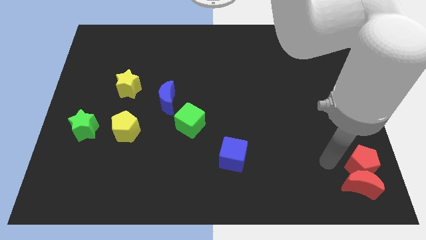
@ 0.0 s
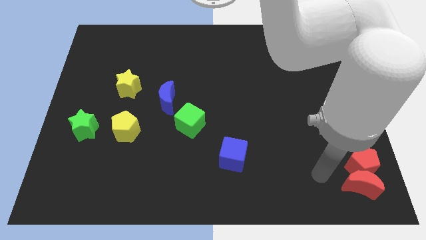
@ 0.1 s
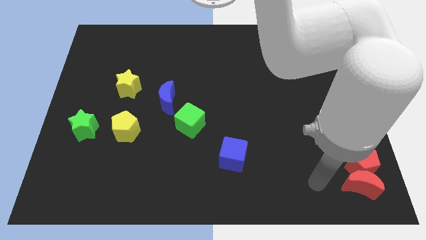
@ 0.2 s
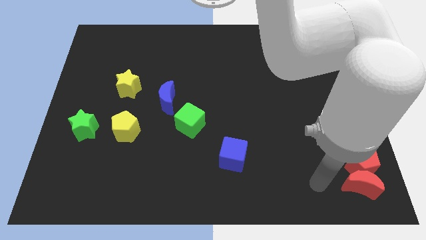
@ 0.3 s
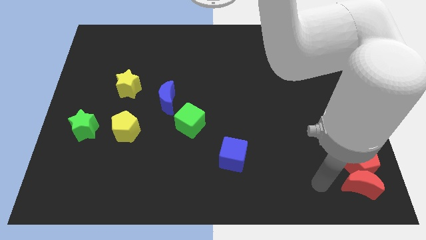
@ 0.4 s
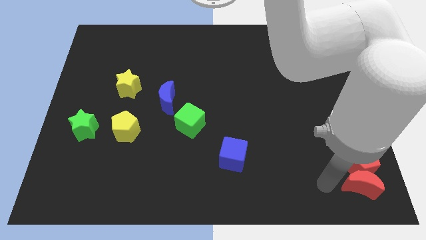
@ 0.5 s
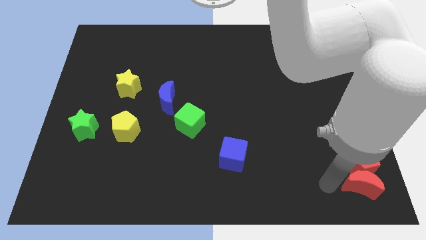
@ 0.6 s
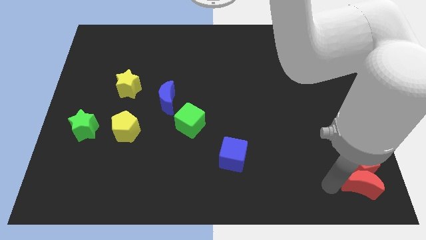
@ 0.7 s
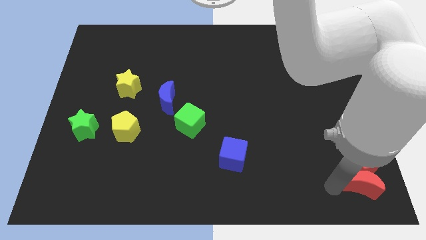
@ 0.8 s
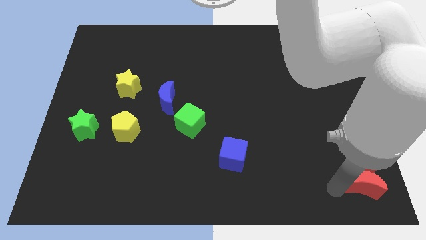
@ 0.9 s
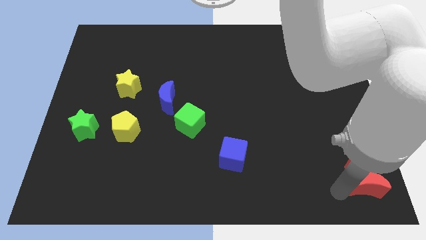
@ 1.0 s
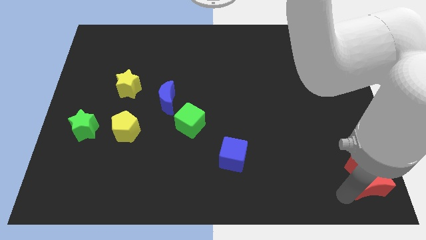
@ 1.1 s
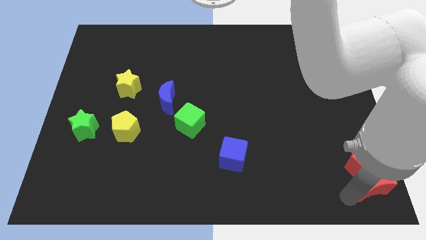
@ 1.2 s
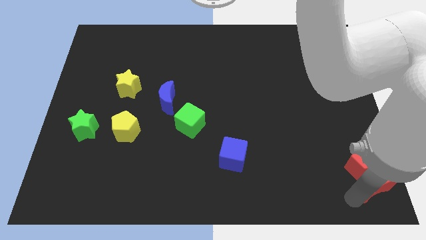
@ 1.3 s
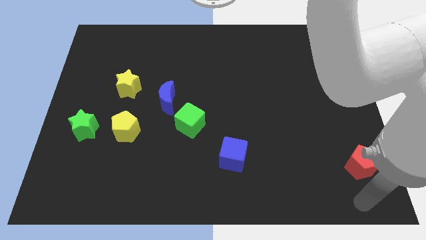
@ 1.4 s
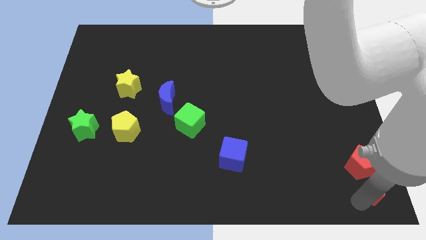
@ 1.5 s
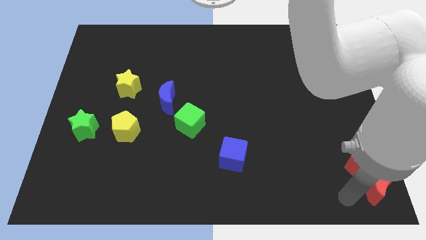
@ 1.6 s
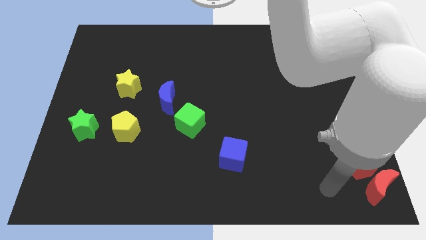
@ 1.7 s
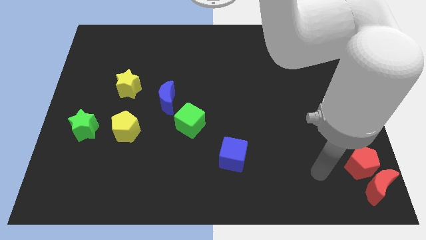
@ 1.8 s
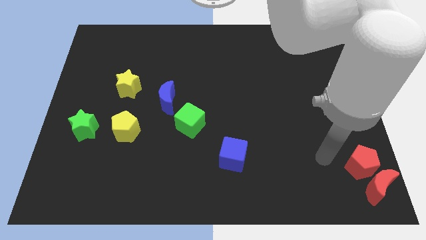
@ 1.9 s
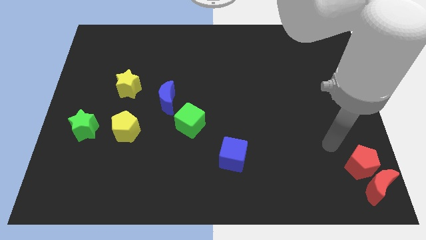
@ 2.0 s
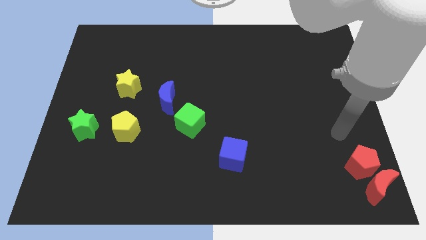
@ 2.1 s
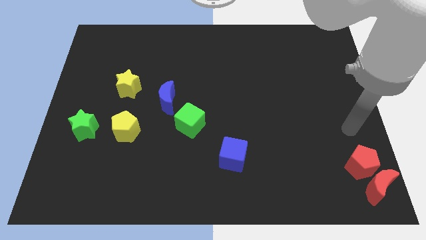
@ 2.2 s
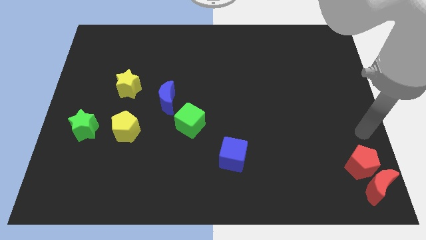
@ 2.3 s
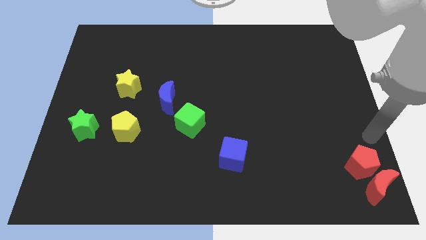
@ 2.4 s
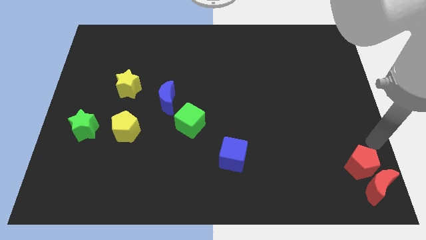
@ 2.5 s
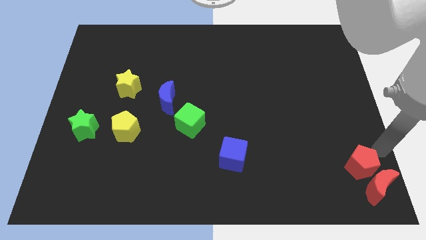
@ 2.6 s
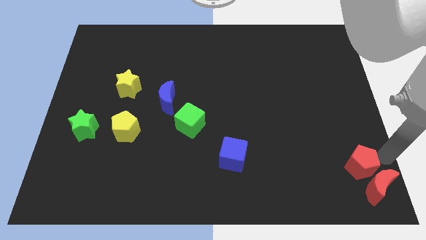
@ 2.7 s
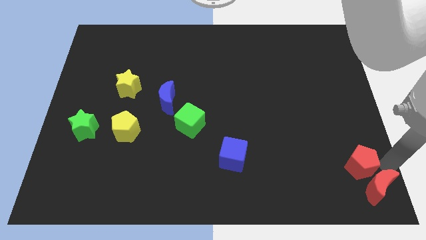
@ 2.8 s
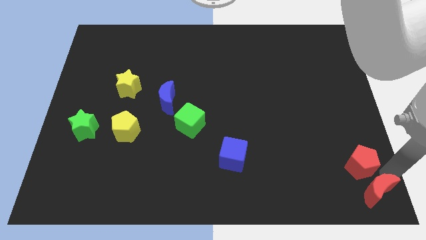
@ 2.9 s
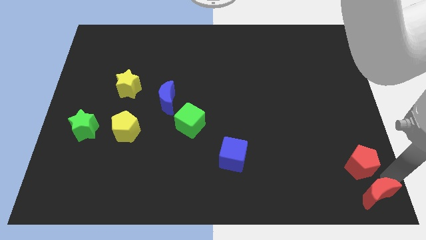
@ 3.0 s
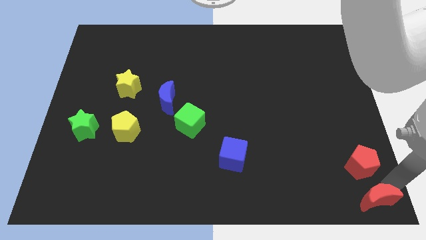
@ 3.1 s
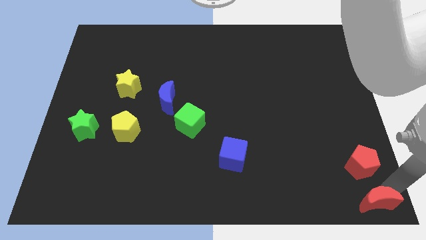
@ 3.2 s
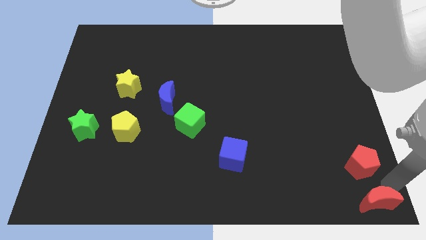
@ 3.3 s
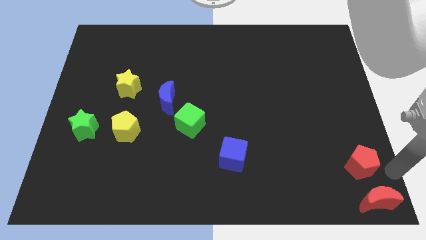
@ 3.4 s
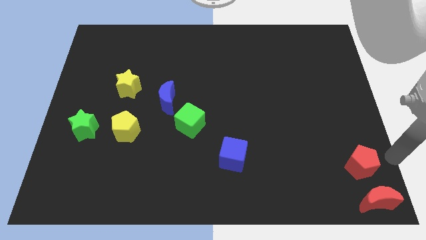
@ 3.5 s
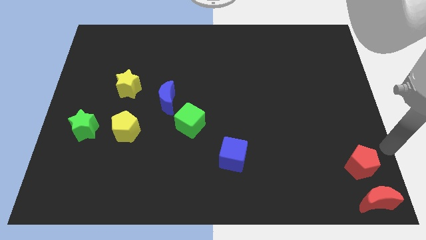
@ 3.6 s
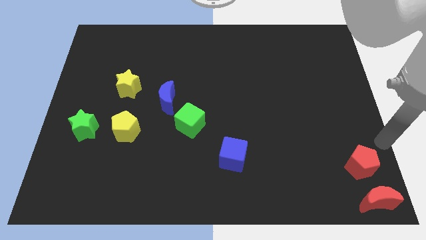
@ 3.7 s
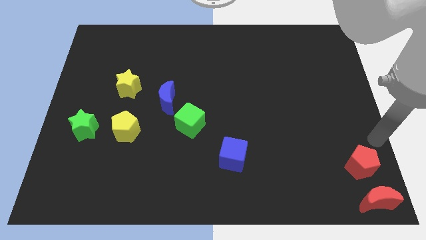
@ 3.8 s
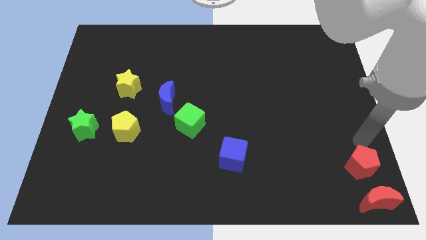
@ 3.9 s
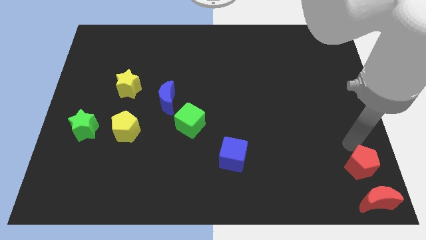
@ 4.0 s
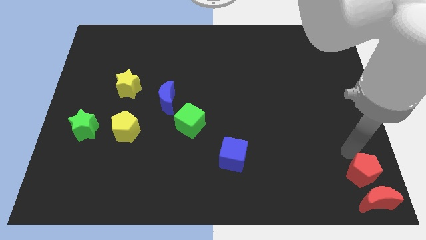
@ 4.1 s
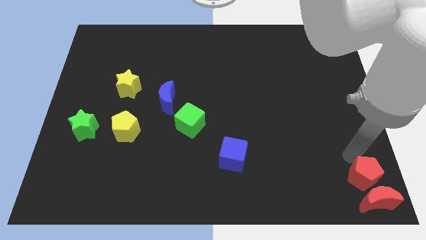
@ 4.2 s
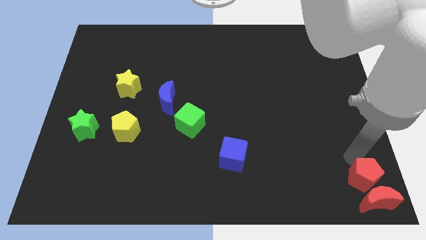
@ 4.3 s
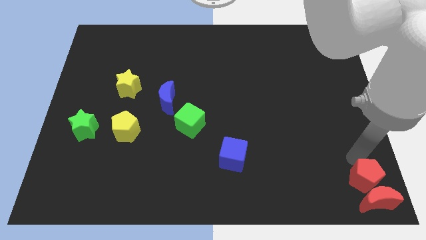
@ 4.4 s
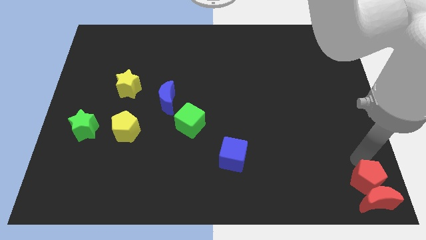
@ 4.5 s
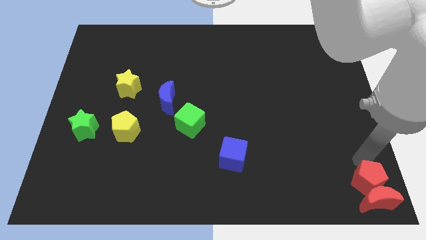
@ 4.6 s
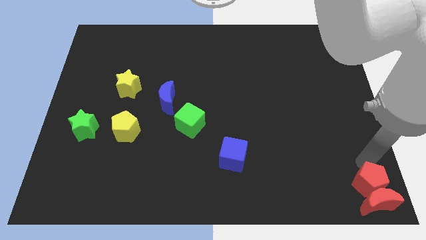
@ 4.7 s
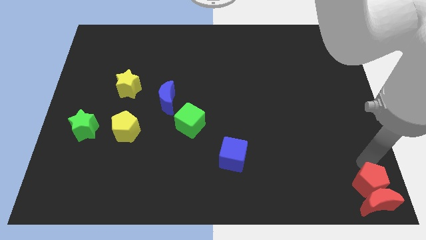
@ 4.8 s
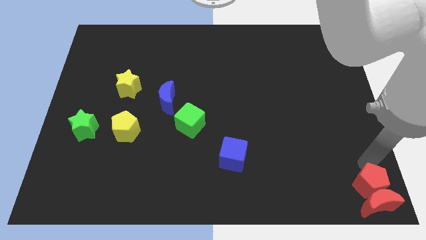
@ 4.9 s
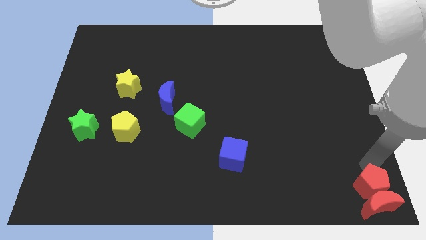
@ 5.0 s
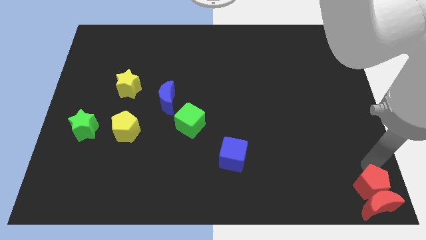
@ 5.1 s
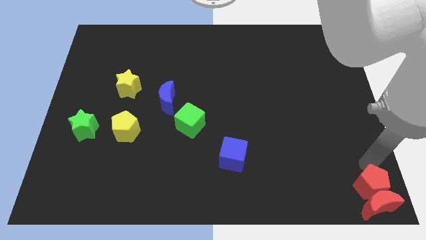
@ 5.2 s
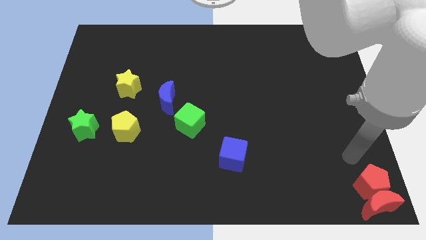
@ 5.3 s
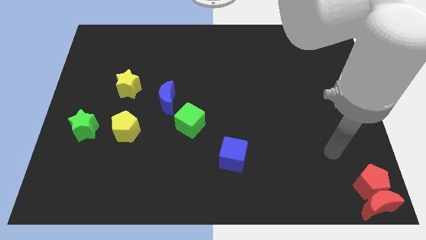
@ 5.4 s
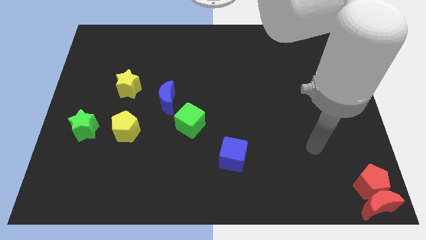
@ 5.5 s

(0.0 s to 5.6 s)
place the red pentagon and red crescent to the right bottom of the board

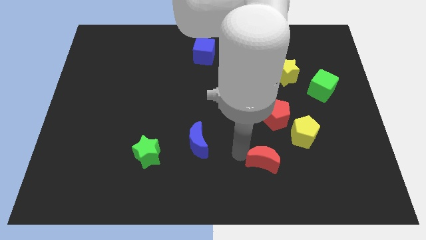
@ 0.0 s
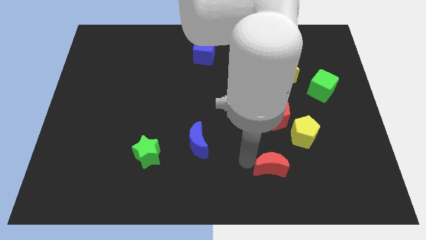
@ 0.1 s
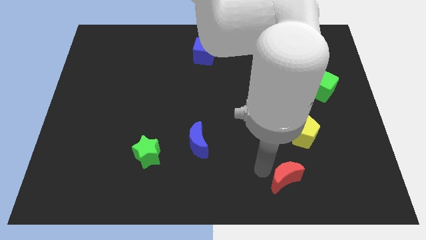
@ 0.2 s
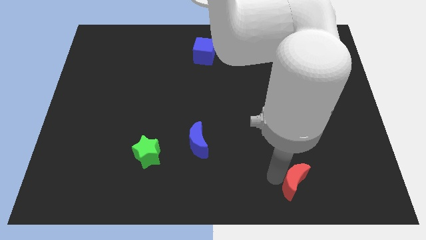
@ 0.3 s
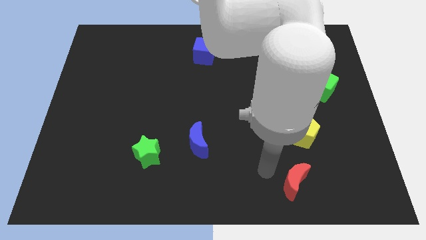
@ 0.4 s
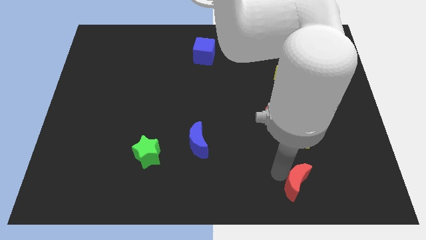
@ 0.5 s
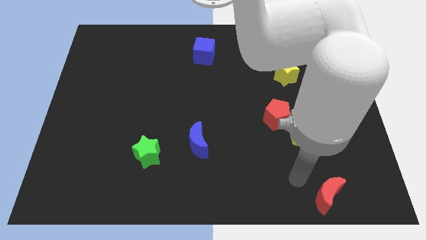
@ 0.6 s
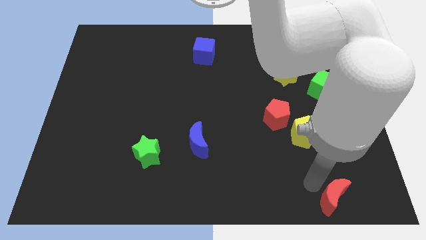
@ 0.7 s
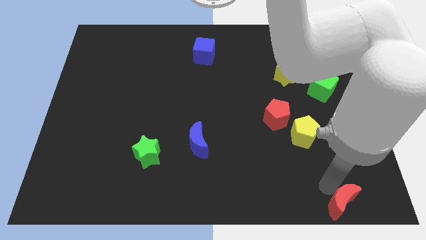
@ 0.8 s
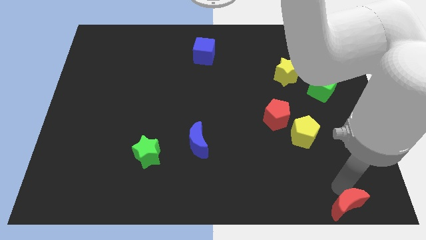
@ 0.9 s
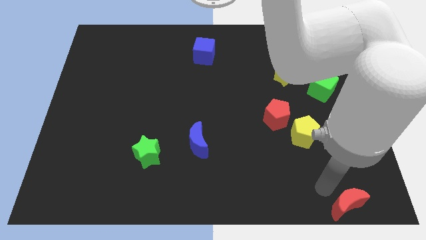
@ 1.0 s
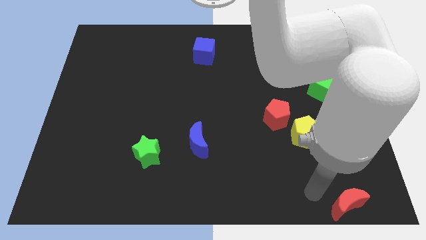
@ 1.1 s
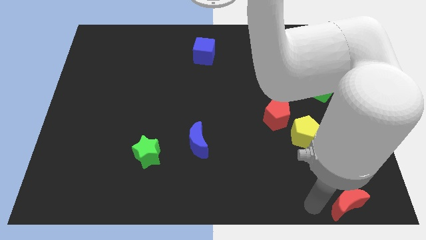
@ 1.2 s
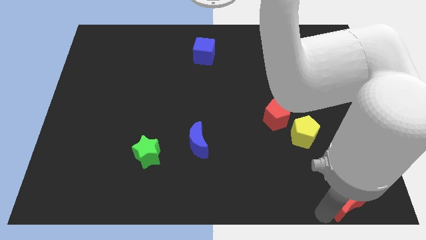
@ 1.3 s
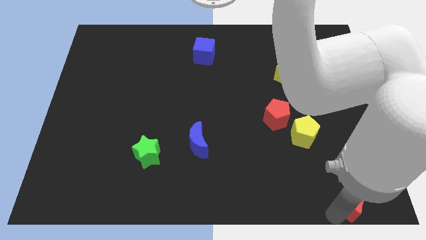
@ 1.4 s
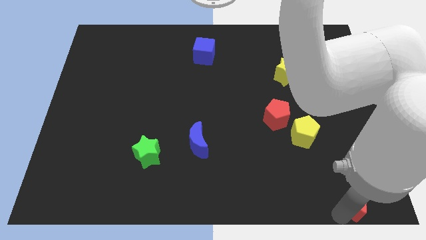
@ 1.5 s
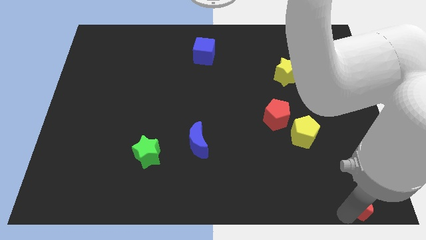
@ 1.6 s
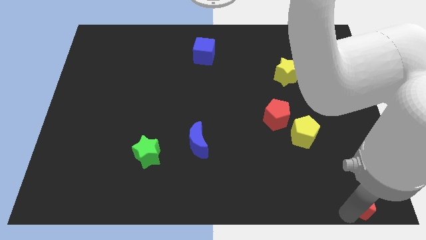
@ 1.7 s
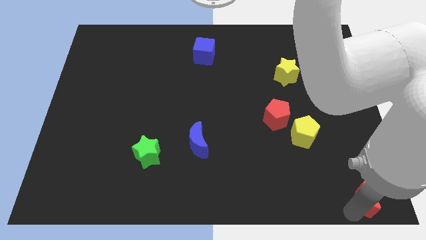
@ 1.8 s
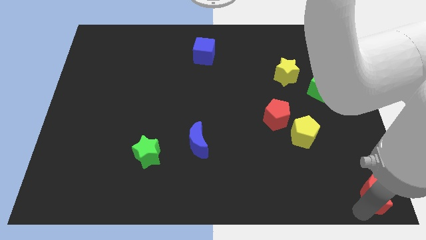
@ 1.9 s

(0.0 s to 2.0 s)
move the red crescent towards the bottom right corner of the board

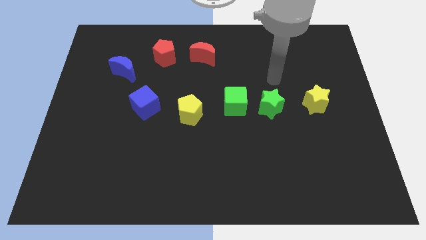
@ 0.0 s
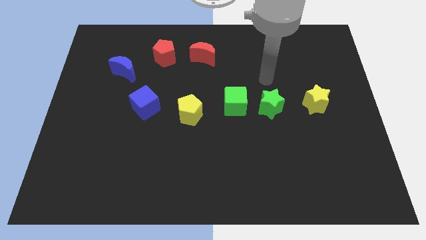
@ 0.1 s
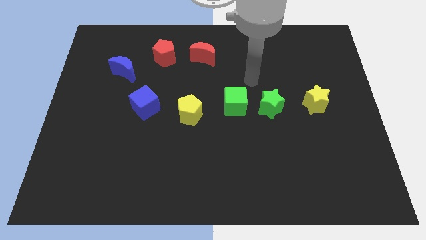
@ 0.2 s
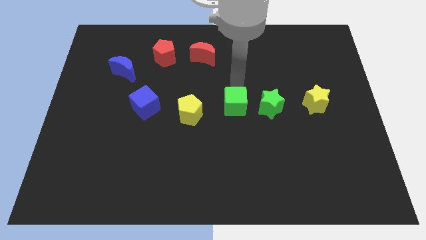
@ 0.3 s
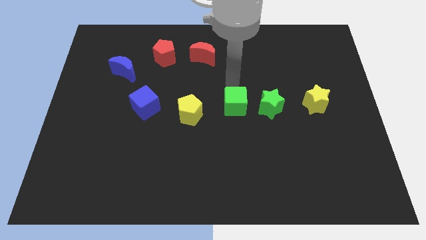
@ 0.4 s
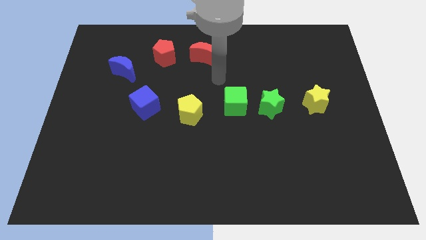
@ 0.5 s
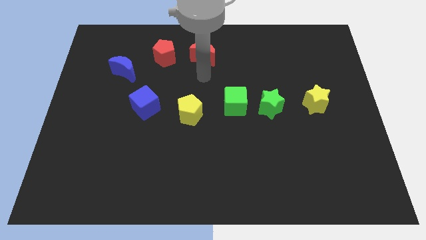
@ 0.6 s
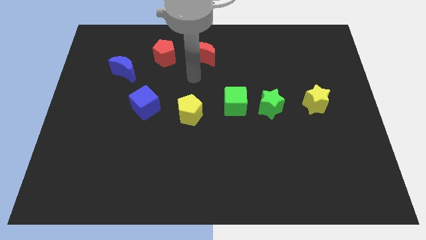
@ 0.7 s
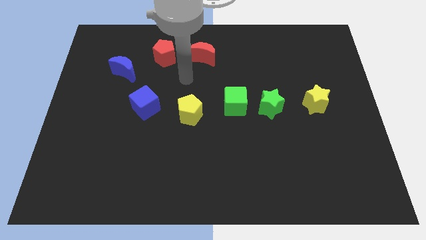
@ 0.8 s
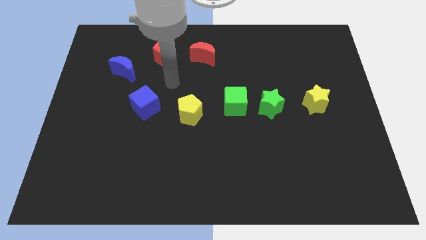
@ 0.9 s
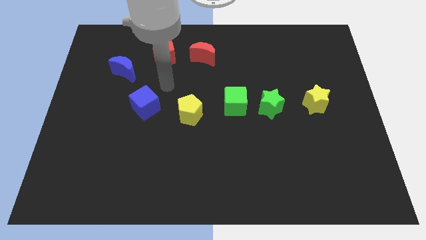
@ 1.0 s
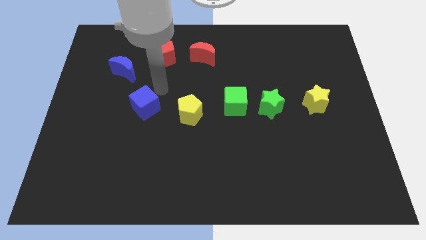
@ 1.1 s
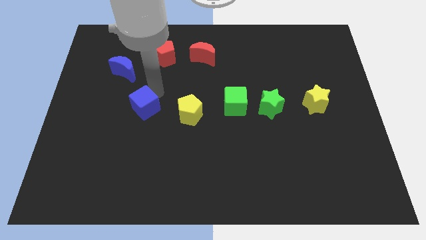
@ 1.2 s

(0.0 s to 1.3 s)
place your hand above the blue cube

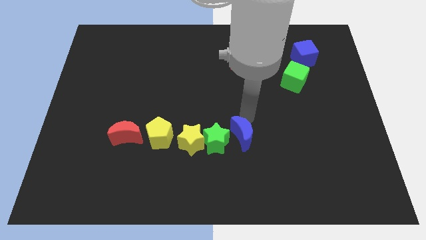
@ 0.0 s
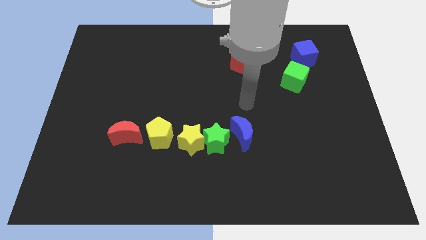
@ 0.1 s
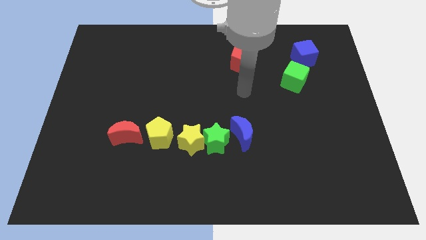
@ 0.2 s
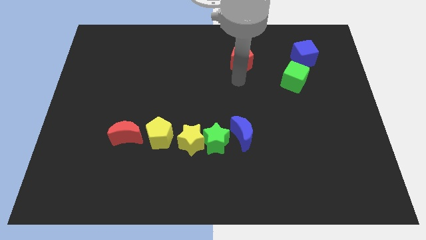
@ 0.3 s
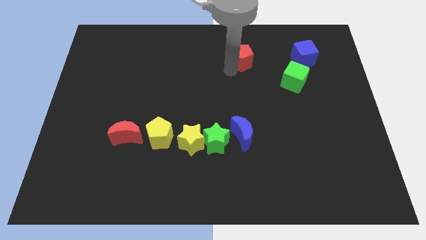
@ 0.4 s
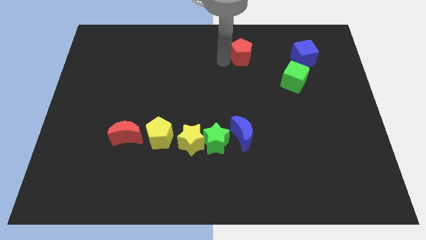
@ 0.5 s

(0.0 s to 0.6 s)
push the red pentagon slightly to the top
